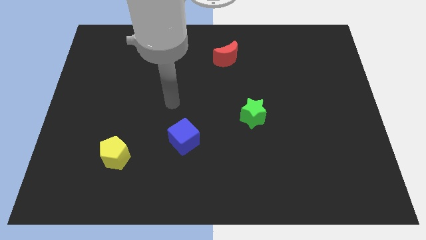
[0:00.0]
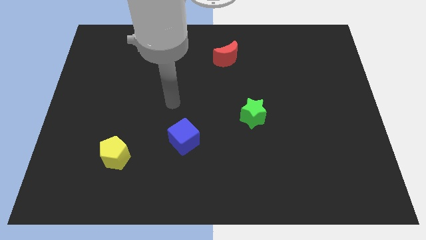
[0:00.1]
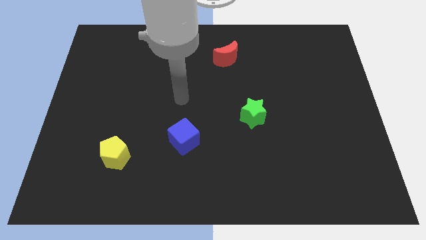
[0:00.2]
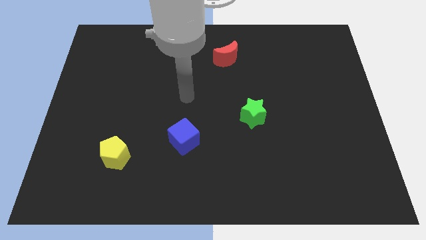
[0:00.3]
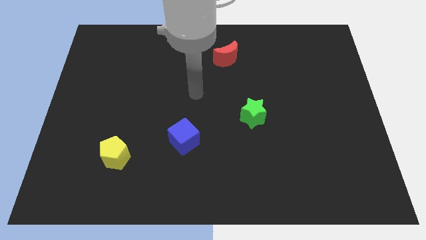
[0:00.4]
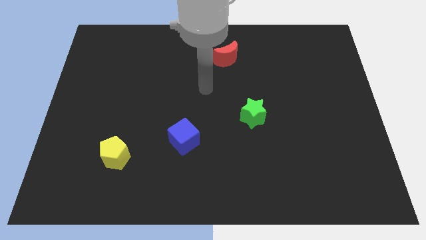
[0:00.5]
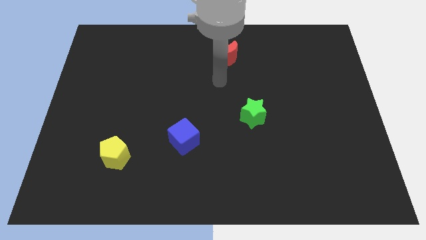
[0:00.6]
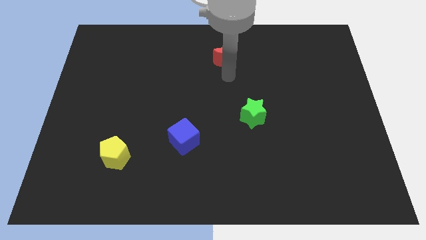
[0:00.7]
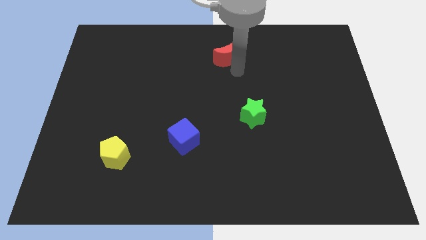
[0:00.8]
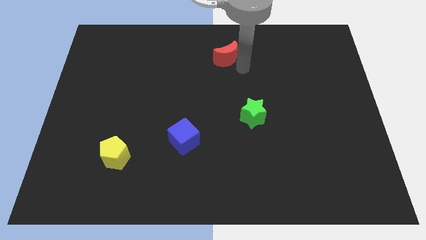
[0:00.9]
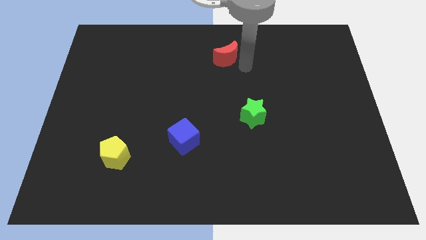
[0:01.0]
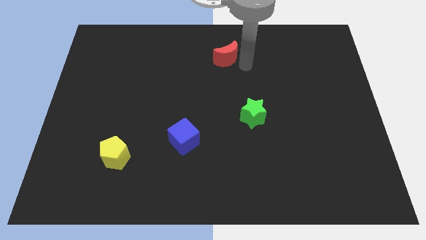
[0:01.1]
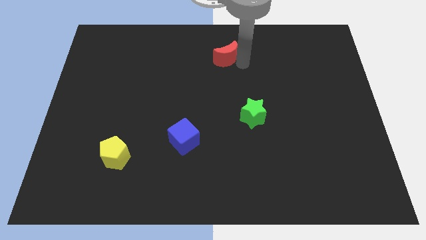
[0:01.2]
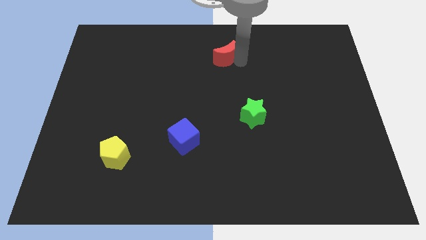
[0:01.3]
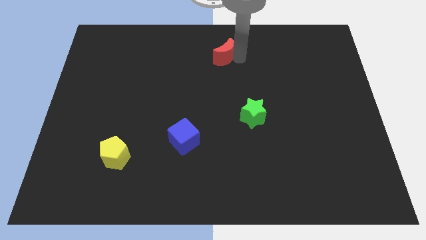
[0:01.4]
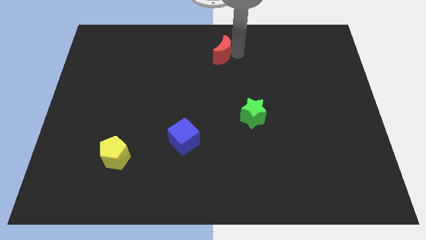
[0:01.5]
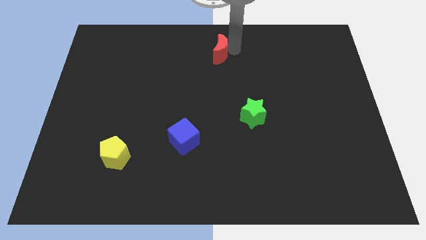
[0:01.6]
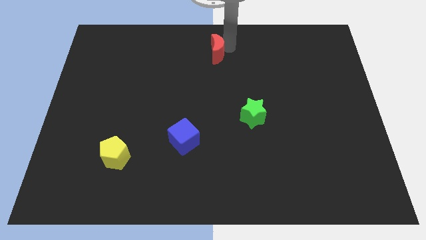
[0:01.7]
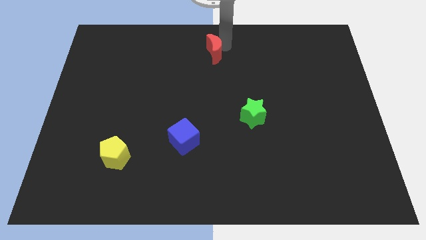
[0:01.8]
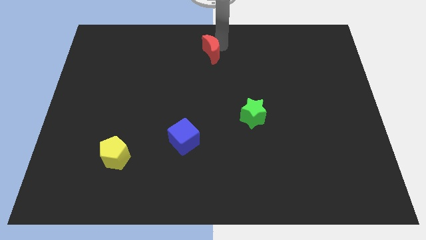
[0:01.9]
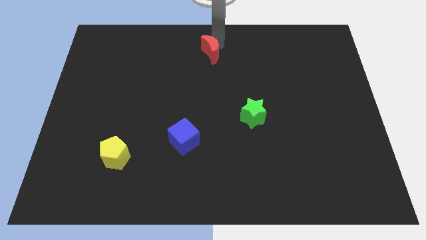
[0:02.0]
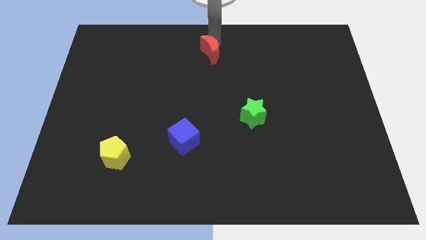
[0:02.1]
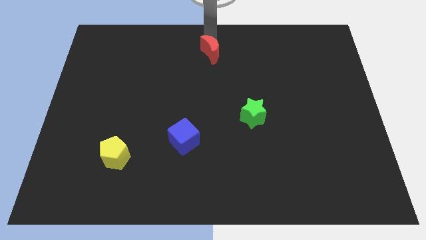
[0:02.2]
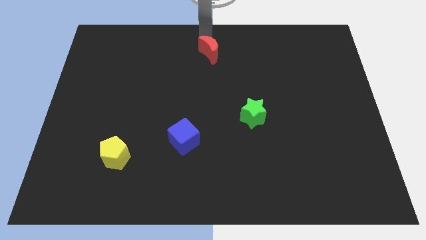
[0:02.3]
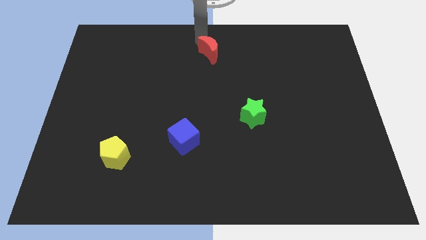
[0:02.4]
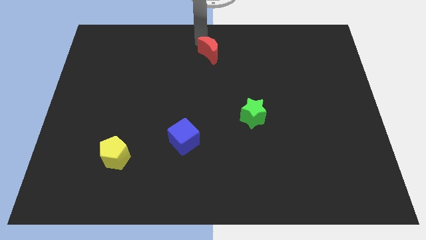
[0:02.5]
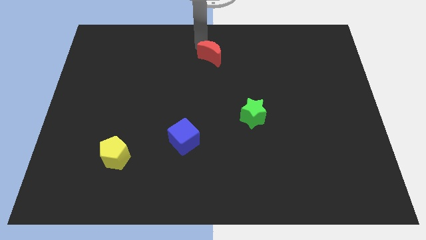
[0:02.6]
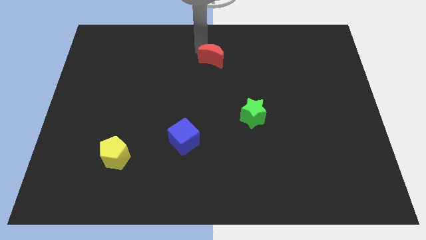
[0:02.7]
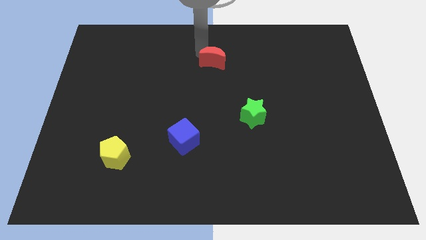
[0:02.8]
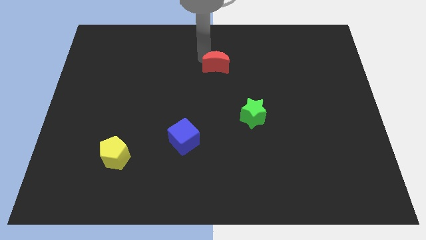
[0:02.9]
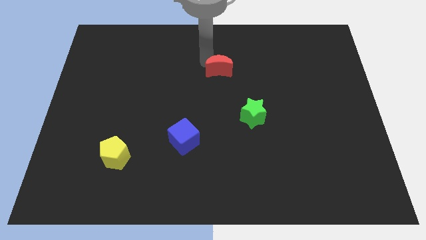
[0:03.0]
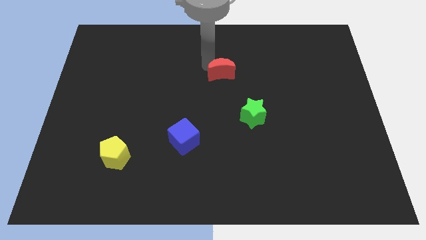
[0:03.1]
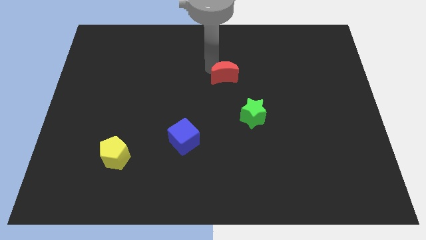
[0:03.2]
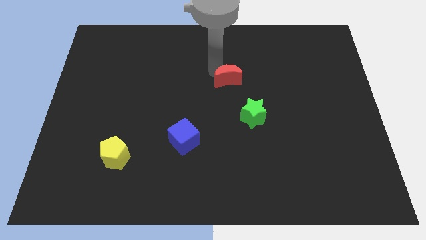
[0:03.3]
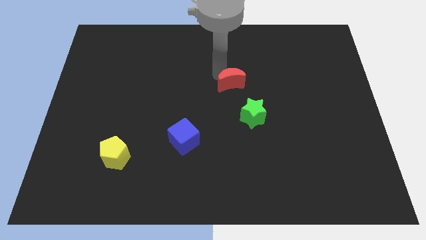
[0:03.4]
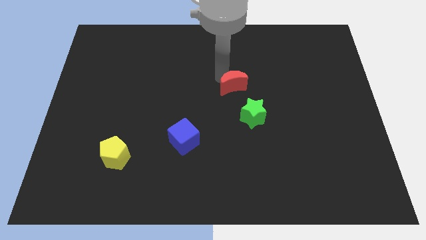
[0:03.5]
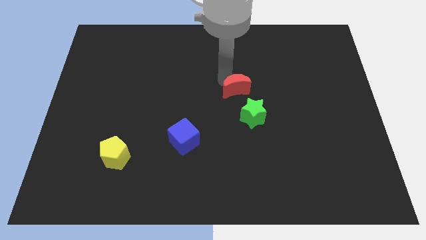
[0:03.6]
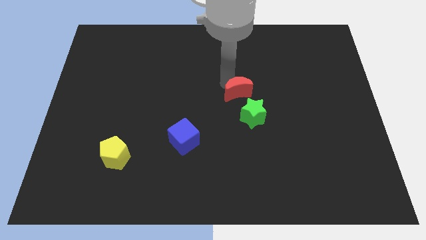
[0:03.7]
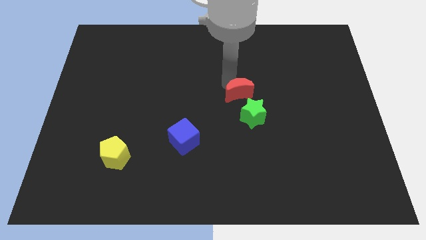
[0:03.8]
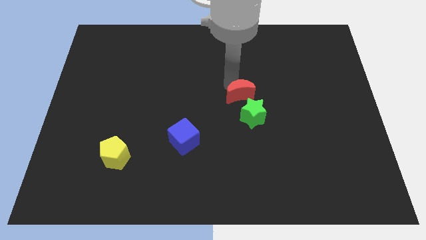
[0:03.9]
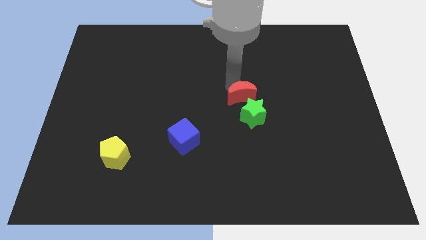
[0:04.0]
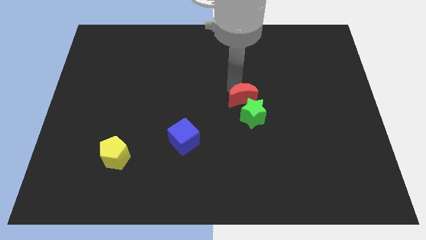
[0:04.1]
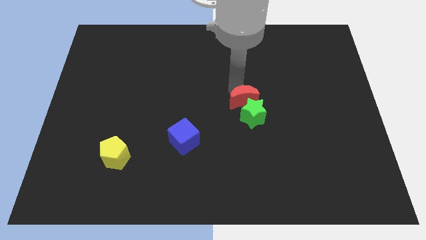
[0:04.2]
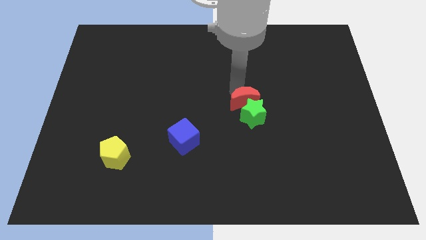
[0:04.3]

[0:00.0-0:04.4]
put the red moon close to the green block

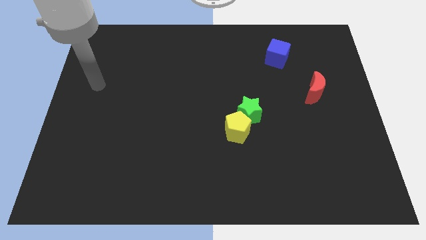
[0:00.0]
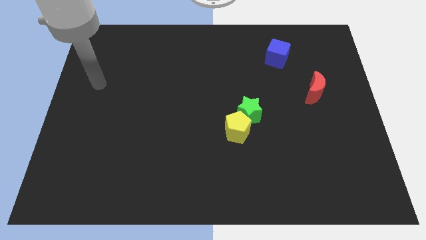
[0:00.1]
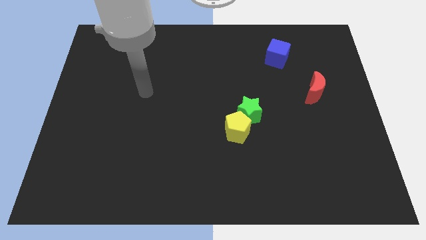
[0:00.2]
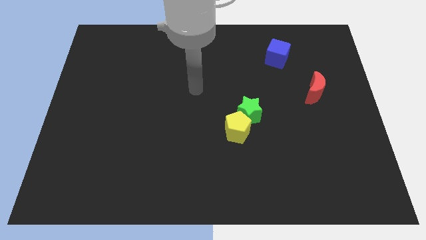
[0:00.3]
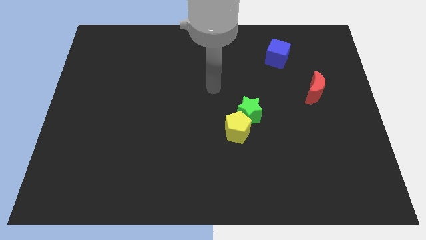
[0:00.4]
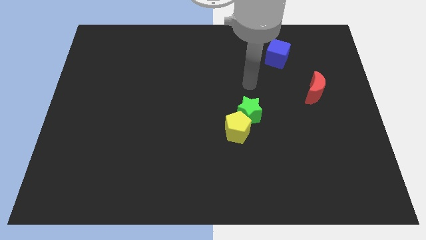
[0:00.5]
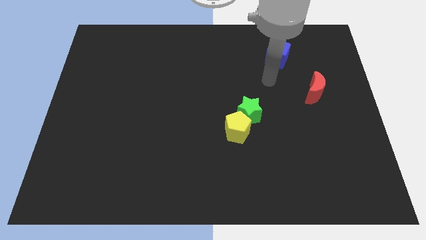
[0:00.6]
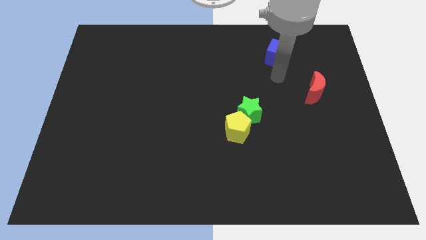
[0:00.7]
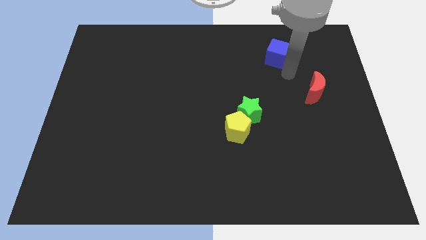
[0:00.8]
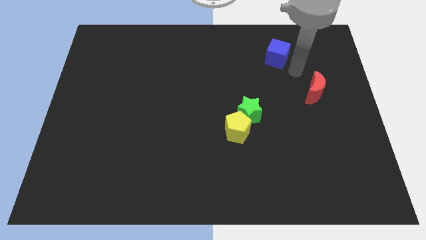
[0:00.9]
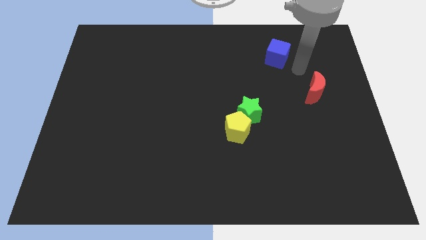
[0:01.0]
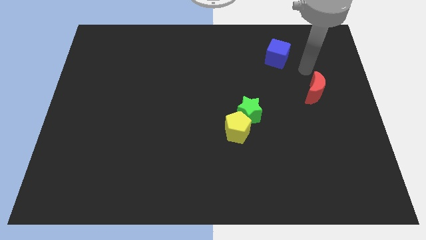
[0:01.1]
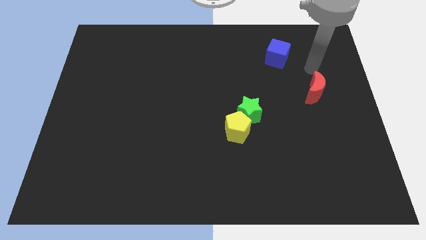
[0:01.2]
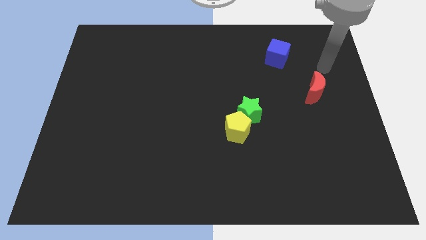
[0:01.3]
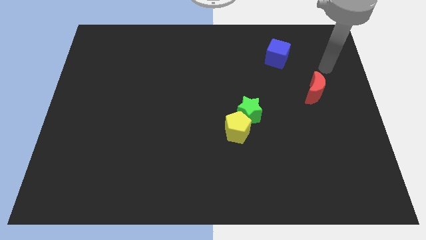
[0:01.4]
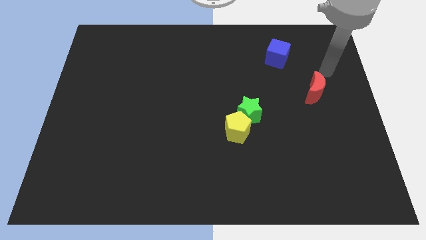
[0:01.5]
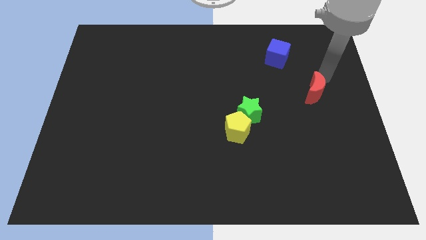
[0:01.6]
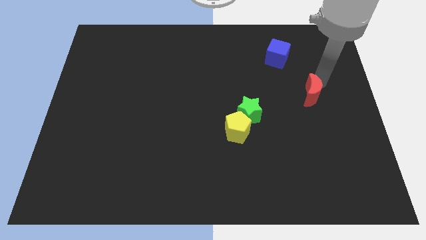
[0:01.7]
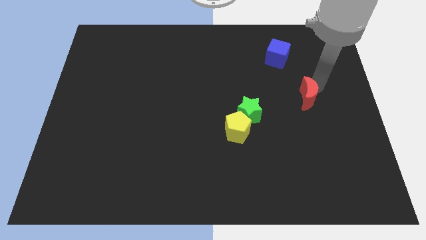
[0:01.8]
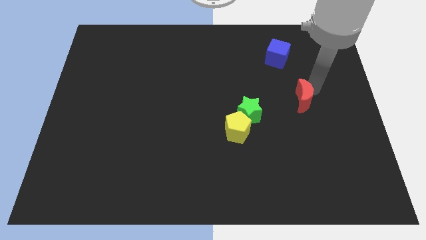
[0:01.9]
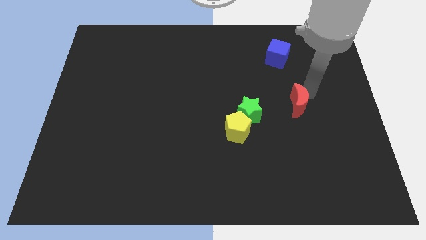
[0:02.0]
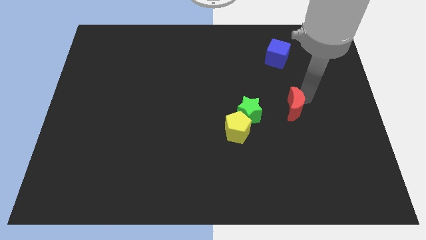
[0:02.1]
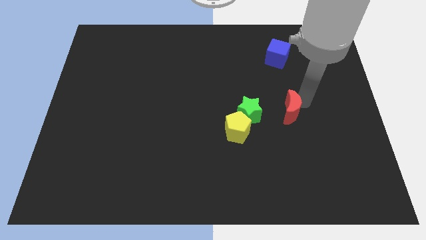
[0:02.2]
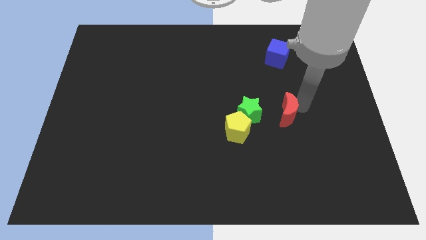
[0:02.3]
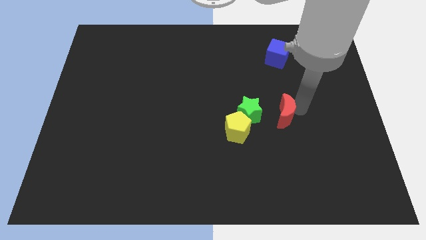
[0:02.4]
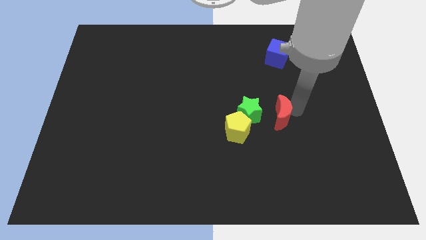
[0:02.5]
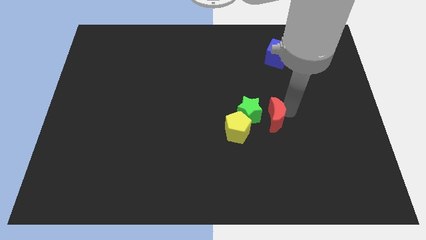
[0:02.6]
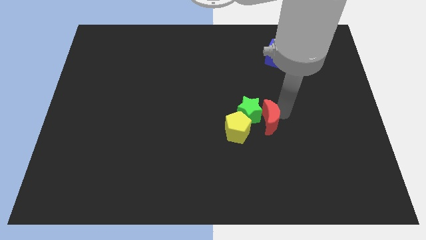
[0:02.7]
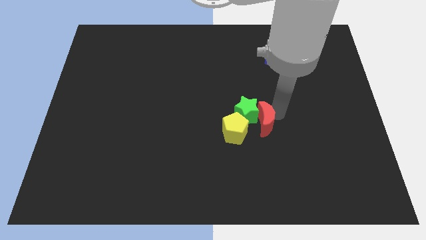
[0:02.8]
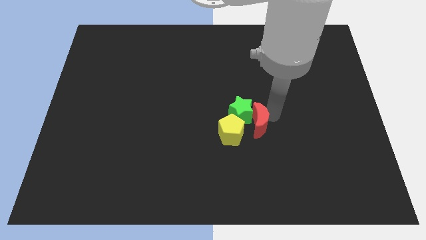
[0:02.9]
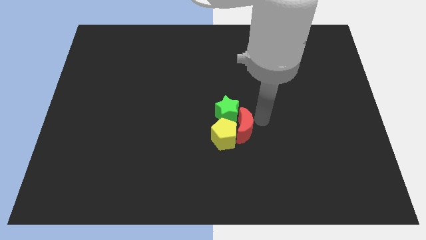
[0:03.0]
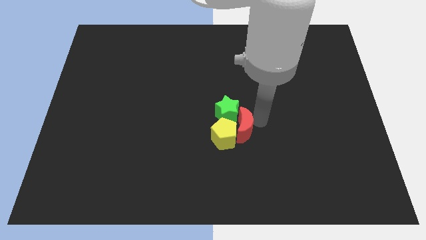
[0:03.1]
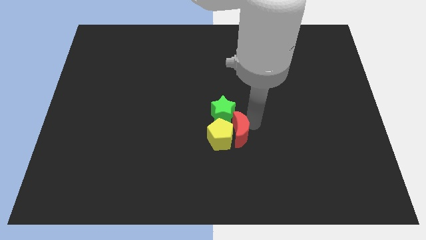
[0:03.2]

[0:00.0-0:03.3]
put the red moon to the yellow block

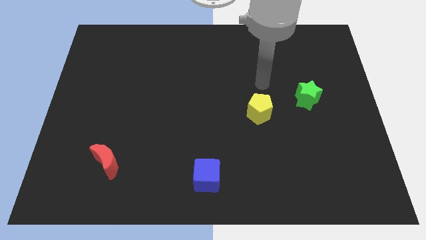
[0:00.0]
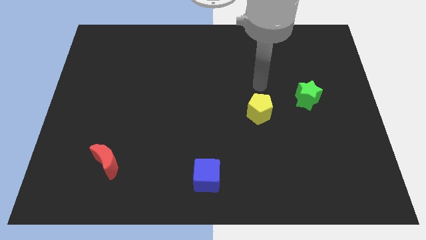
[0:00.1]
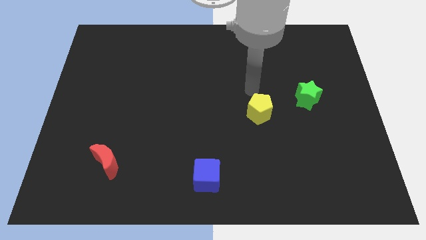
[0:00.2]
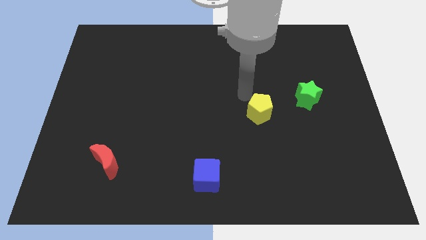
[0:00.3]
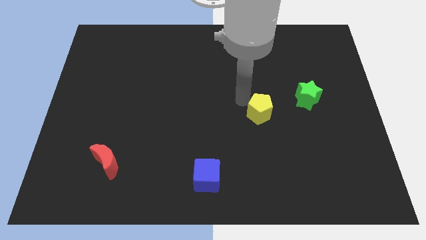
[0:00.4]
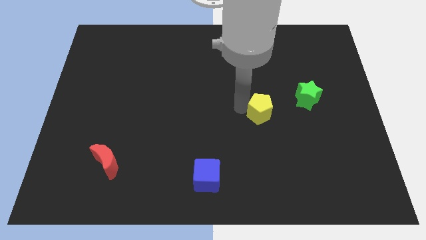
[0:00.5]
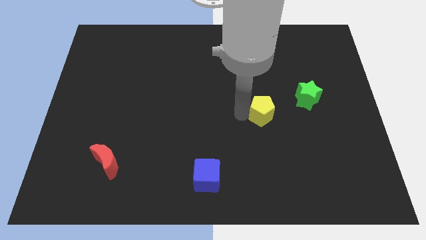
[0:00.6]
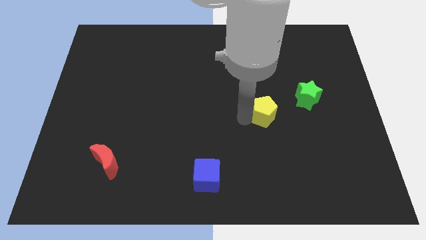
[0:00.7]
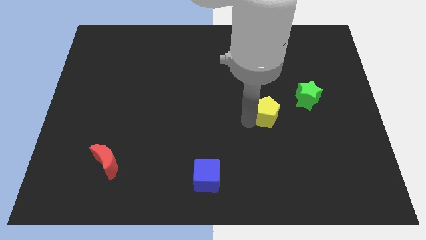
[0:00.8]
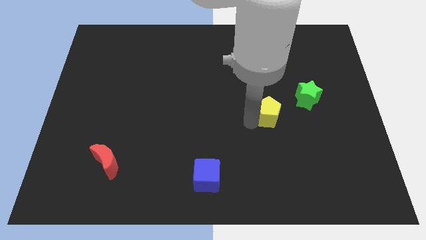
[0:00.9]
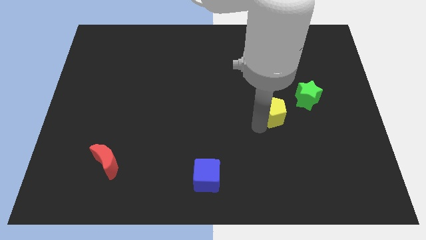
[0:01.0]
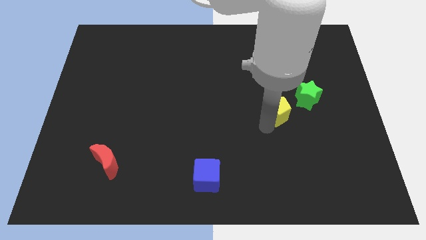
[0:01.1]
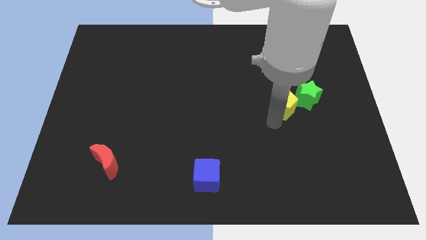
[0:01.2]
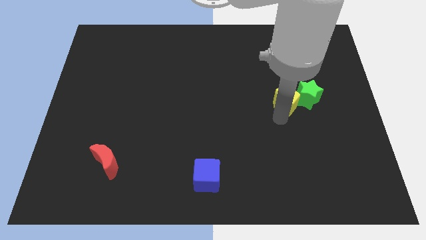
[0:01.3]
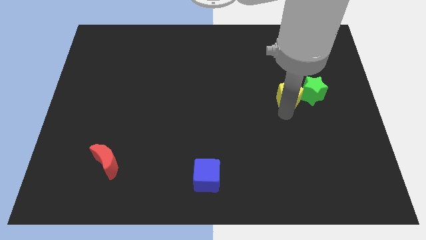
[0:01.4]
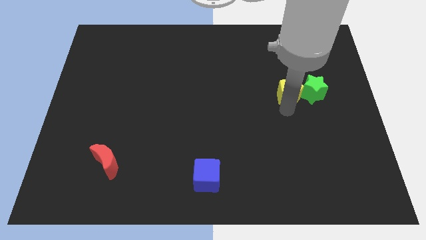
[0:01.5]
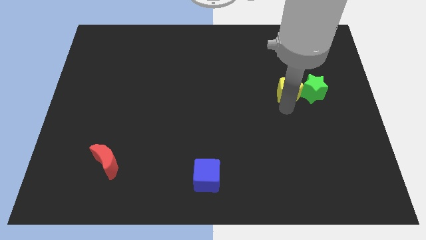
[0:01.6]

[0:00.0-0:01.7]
move the pentagon next to the green block
